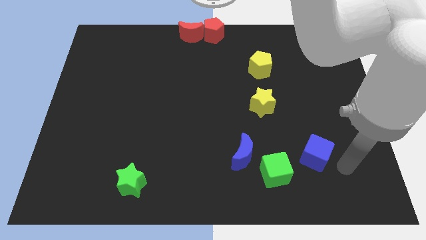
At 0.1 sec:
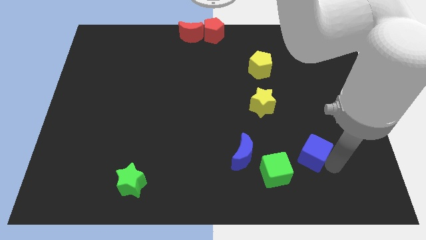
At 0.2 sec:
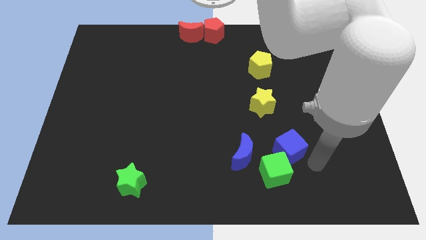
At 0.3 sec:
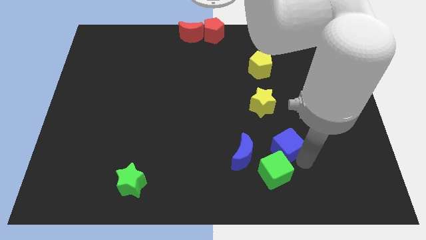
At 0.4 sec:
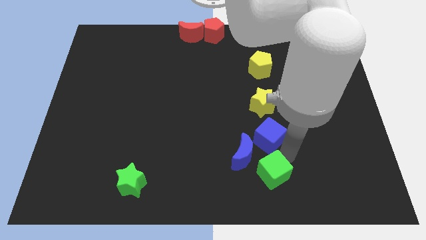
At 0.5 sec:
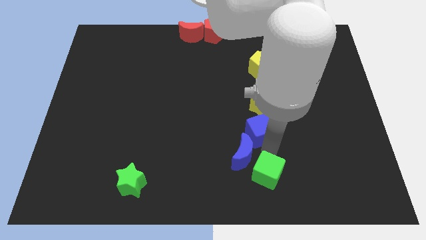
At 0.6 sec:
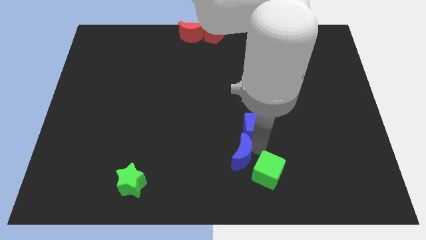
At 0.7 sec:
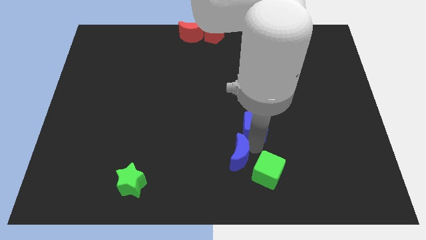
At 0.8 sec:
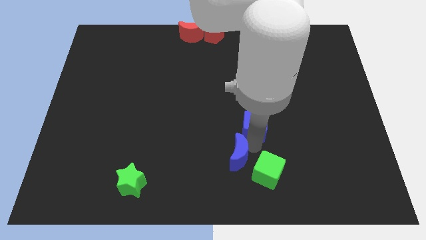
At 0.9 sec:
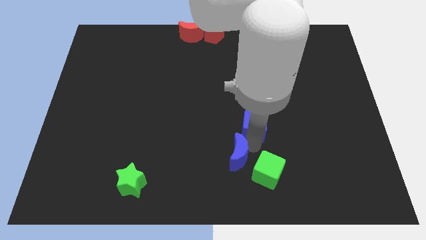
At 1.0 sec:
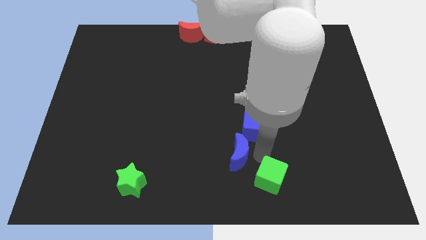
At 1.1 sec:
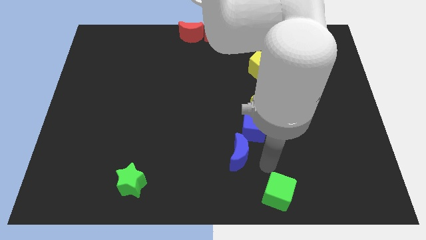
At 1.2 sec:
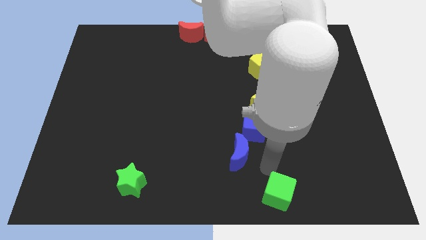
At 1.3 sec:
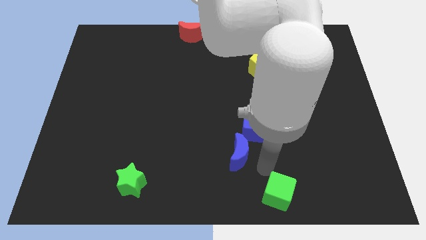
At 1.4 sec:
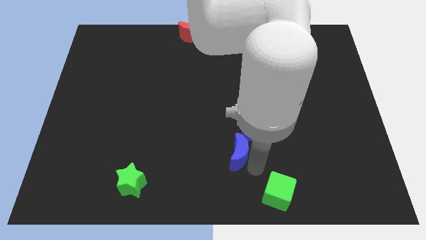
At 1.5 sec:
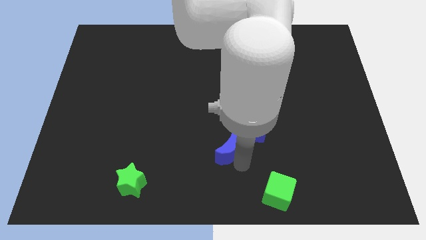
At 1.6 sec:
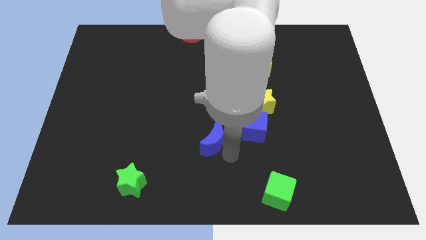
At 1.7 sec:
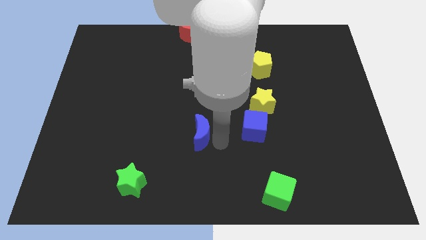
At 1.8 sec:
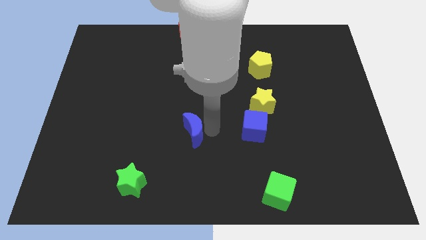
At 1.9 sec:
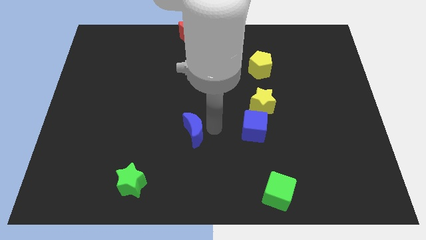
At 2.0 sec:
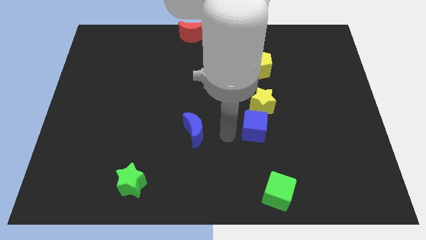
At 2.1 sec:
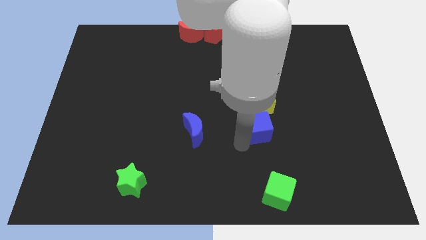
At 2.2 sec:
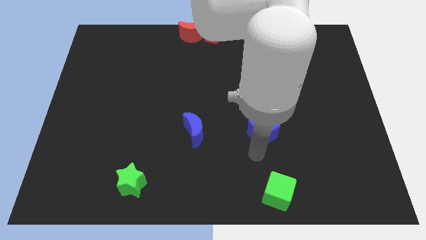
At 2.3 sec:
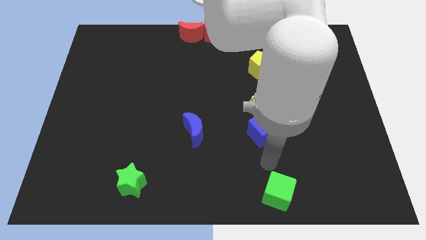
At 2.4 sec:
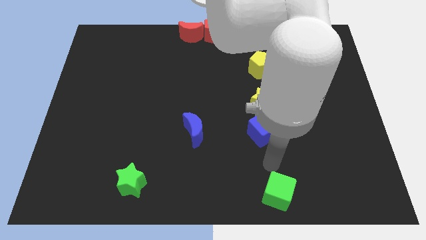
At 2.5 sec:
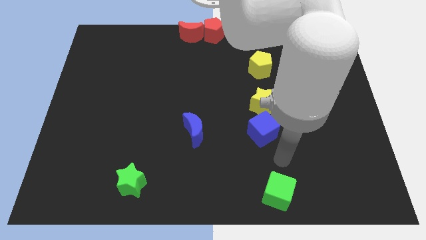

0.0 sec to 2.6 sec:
separate blue moon from blue cube

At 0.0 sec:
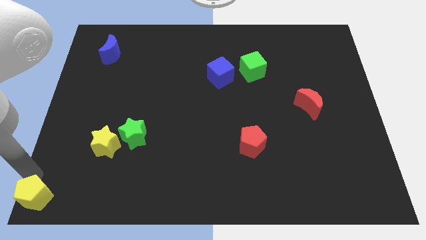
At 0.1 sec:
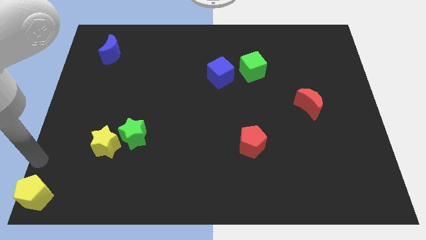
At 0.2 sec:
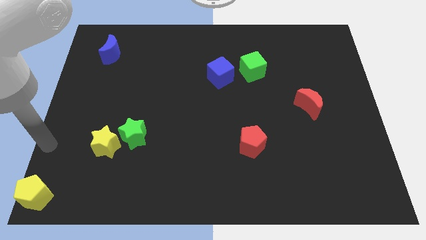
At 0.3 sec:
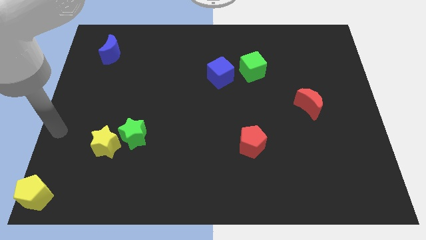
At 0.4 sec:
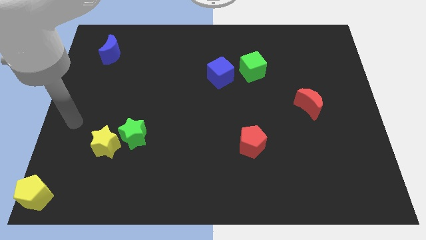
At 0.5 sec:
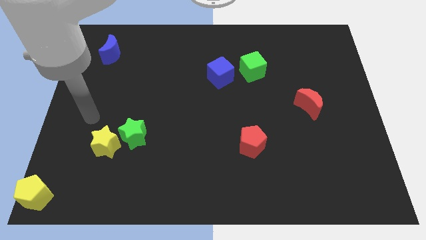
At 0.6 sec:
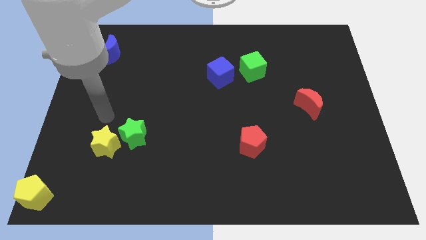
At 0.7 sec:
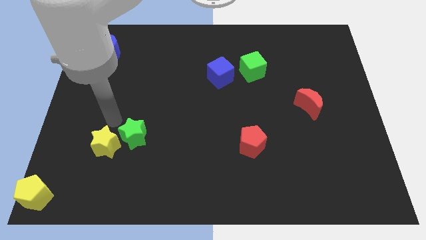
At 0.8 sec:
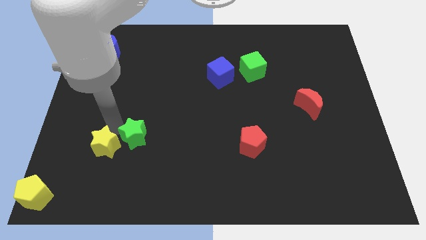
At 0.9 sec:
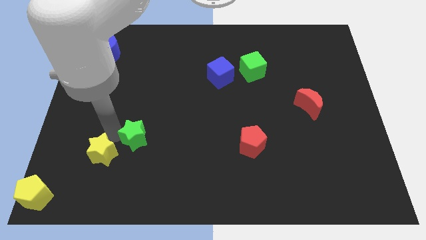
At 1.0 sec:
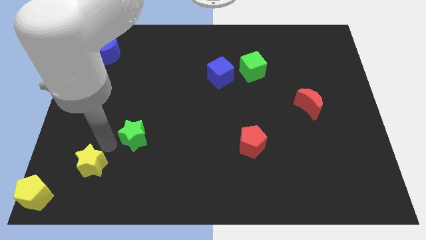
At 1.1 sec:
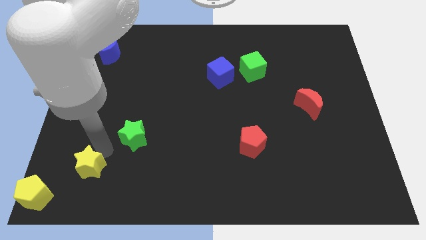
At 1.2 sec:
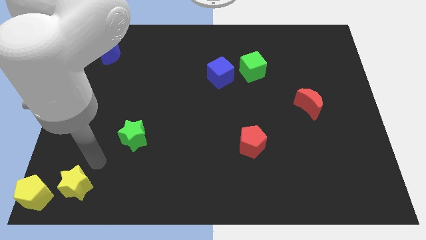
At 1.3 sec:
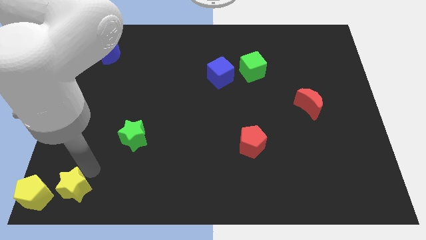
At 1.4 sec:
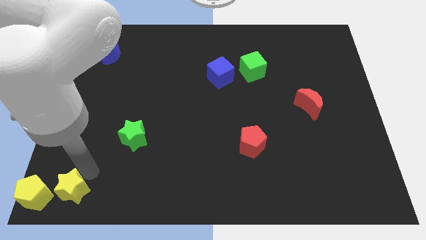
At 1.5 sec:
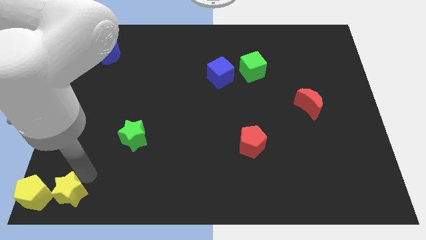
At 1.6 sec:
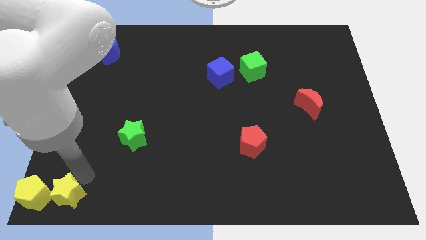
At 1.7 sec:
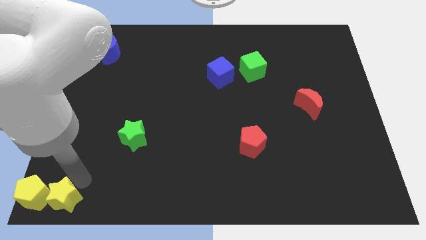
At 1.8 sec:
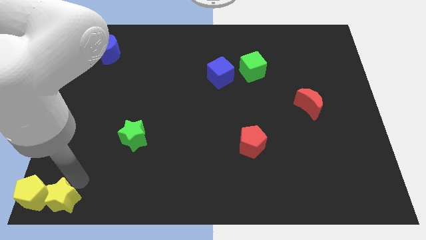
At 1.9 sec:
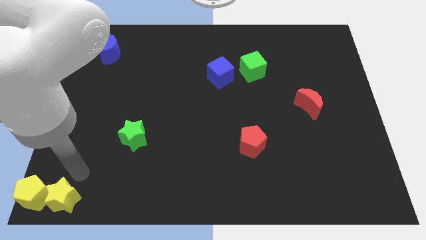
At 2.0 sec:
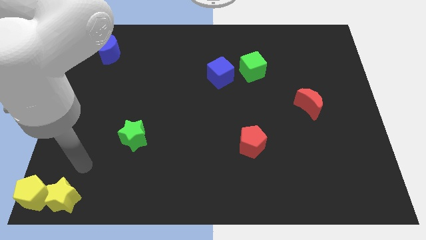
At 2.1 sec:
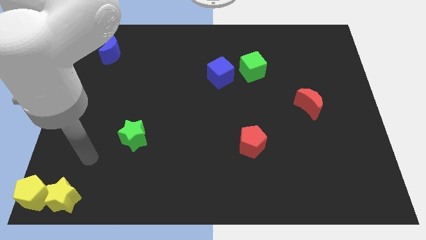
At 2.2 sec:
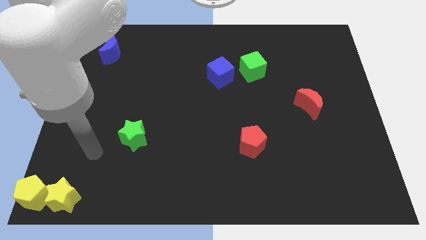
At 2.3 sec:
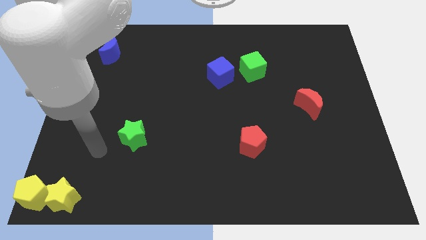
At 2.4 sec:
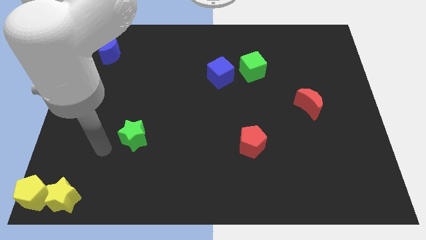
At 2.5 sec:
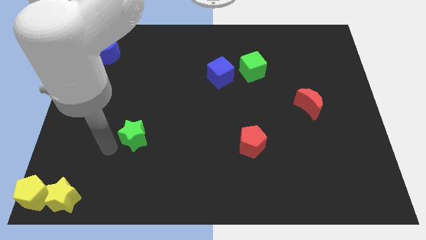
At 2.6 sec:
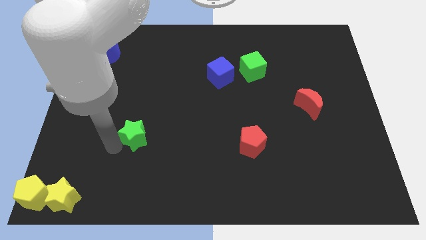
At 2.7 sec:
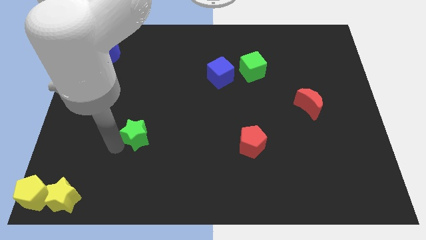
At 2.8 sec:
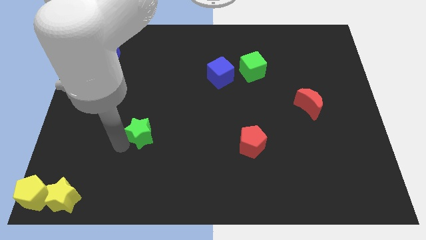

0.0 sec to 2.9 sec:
move the yellow star to the bottom left corner of the board

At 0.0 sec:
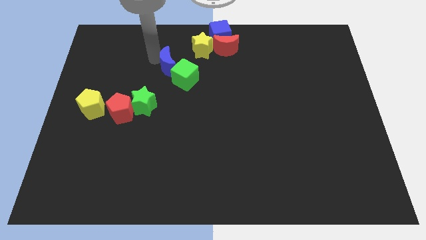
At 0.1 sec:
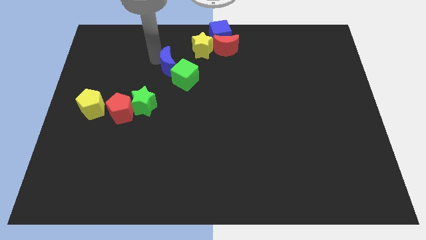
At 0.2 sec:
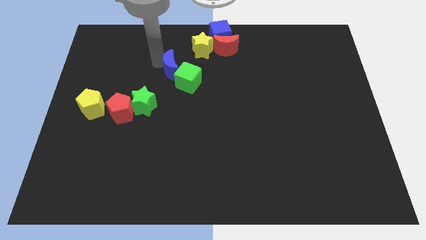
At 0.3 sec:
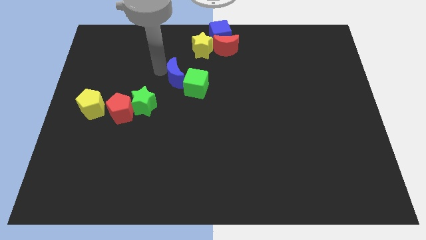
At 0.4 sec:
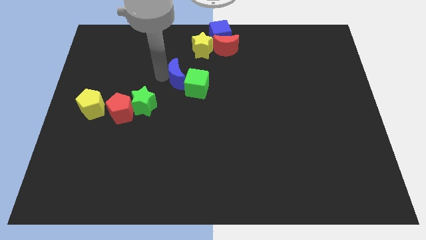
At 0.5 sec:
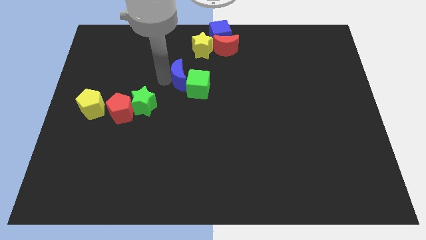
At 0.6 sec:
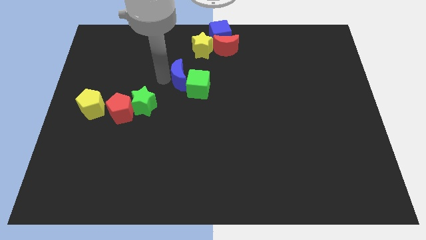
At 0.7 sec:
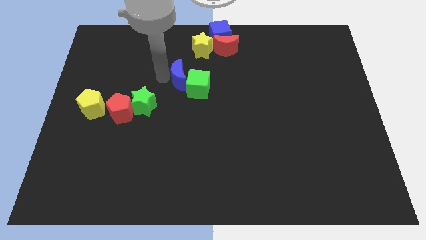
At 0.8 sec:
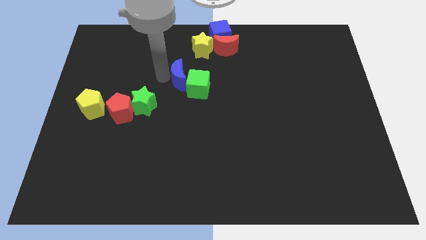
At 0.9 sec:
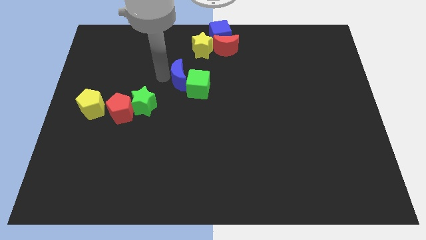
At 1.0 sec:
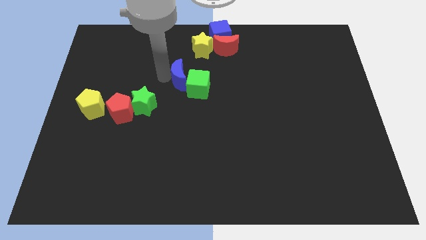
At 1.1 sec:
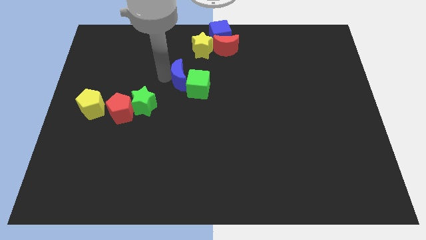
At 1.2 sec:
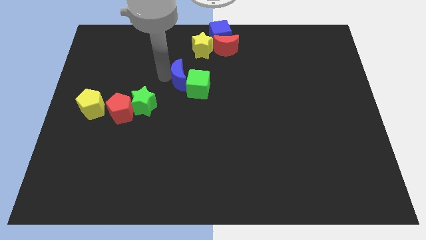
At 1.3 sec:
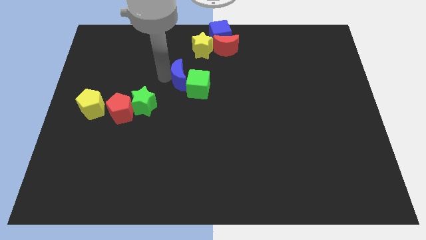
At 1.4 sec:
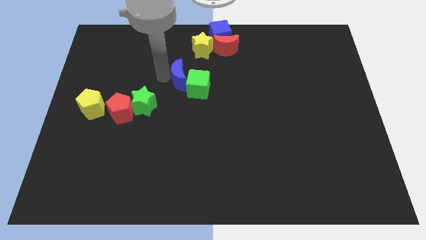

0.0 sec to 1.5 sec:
push blue moon in to green cube

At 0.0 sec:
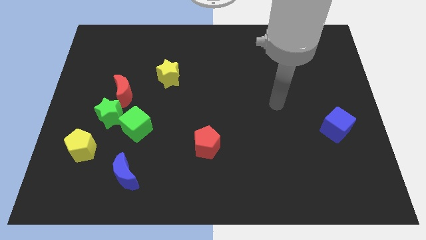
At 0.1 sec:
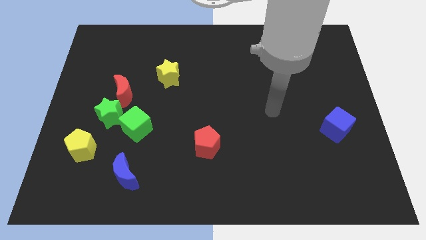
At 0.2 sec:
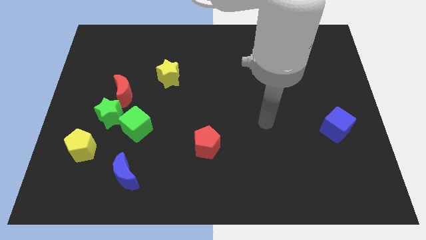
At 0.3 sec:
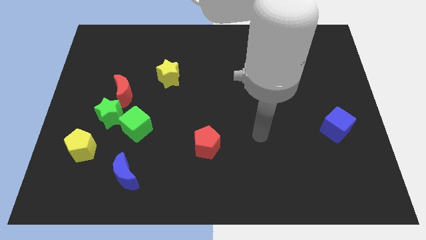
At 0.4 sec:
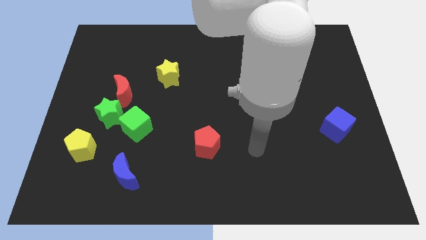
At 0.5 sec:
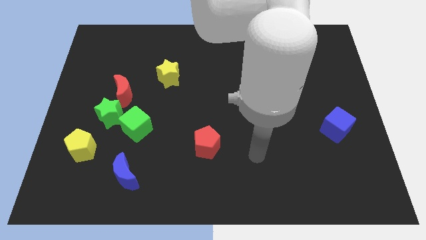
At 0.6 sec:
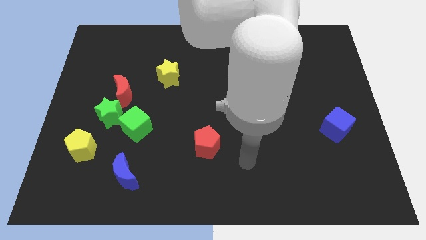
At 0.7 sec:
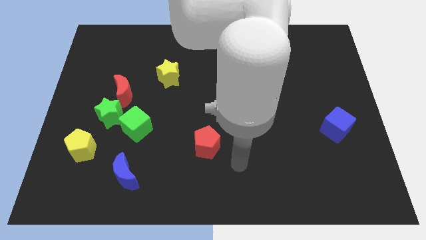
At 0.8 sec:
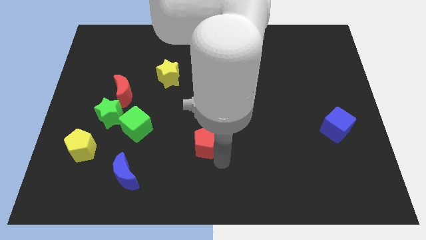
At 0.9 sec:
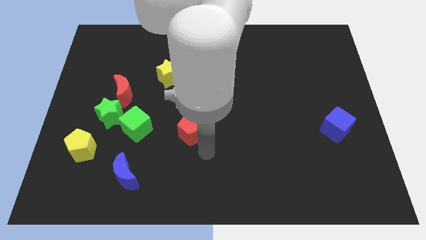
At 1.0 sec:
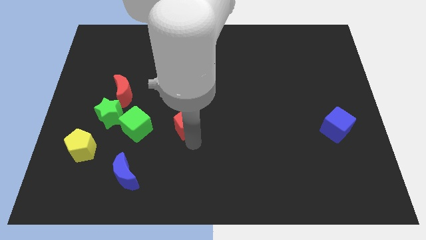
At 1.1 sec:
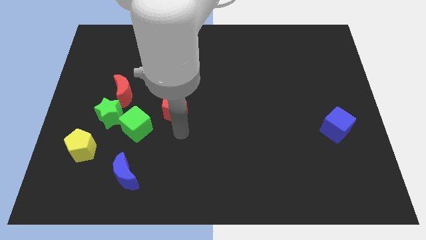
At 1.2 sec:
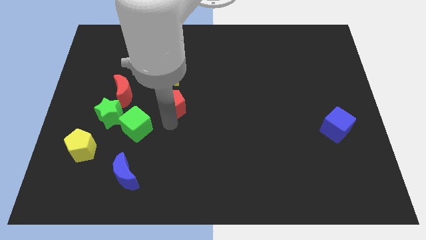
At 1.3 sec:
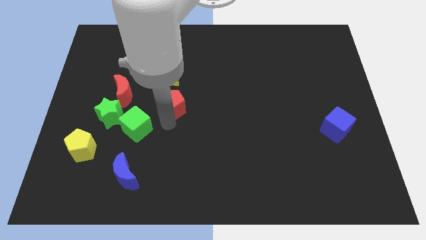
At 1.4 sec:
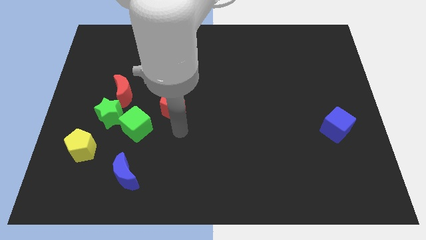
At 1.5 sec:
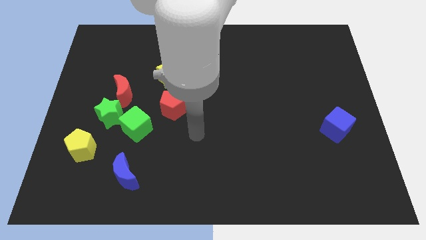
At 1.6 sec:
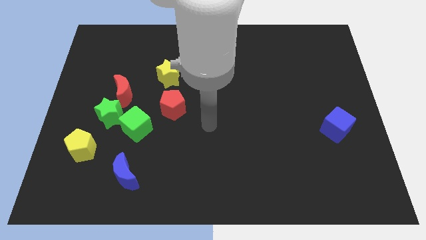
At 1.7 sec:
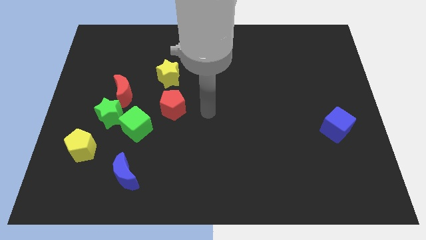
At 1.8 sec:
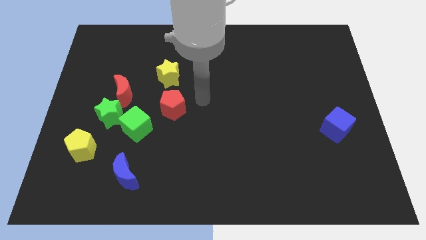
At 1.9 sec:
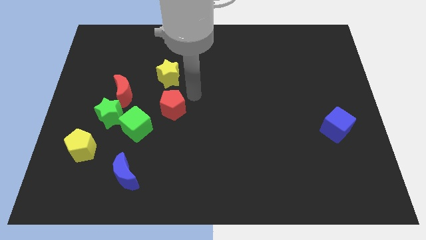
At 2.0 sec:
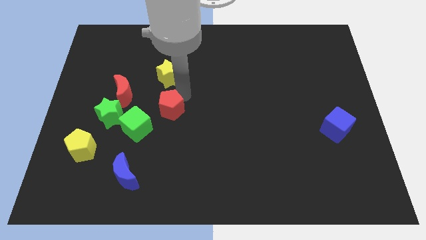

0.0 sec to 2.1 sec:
slide the red pentagon below the yellow star
